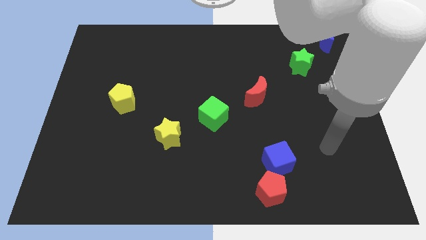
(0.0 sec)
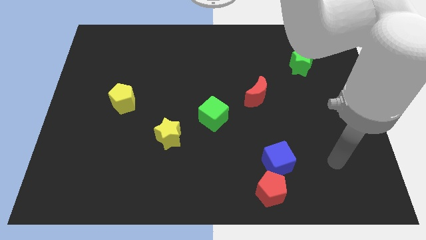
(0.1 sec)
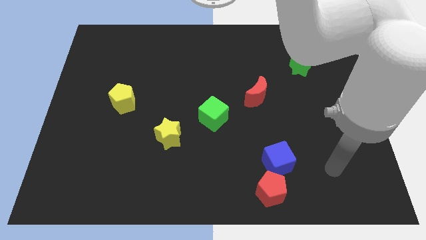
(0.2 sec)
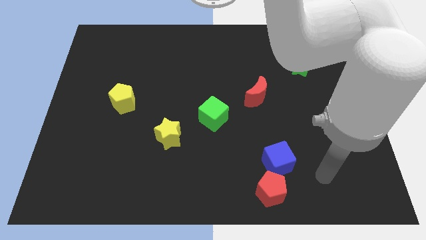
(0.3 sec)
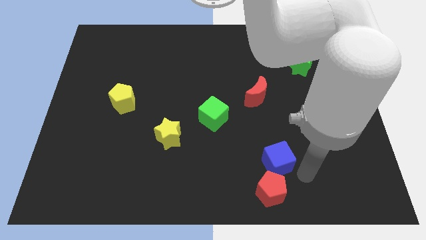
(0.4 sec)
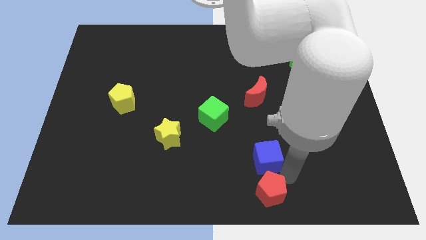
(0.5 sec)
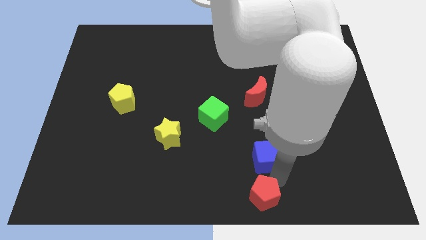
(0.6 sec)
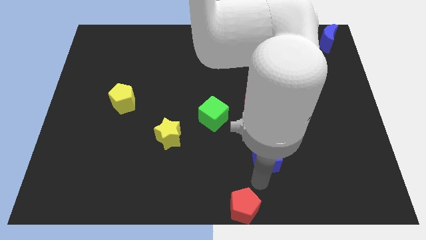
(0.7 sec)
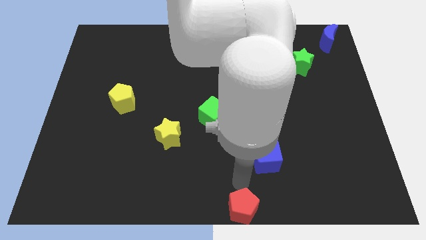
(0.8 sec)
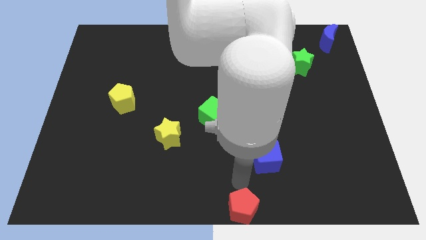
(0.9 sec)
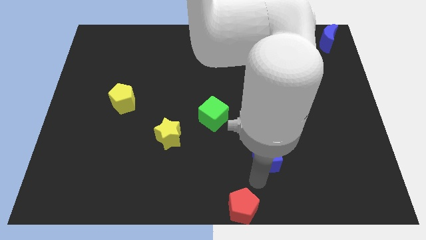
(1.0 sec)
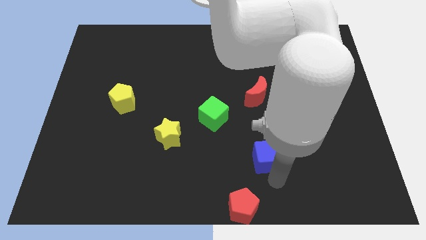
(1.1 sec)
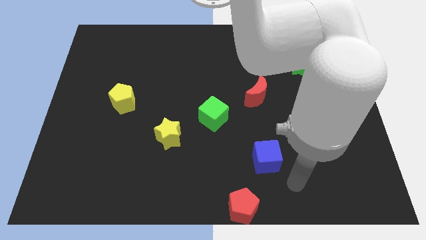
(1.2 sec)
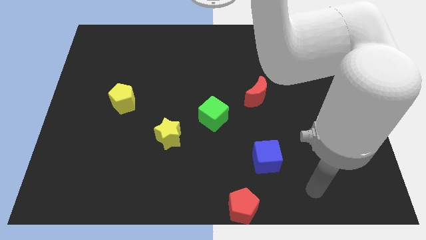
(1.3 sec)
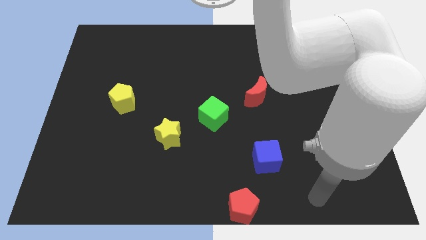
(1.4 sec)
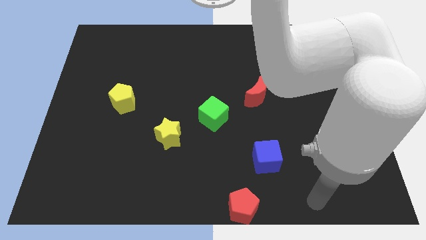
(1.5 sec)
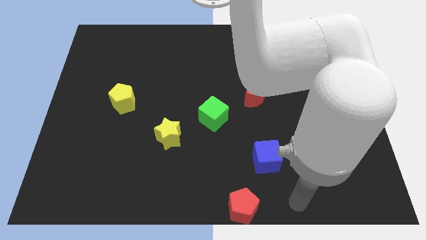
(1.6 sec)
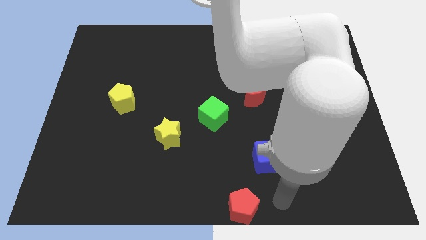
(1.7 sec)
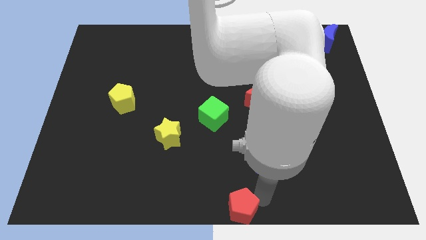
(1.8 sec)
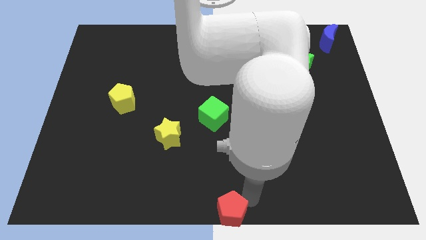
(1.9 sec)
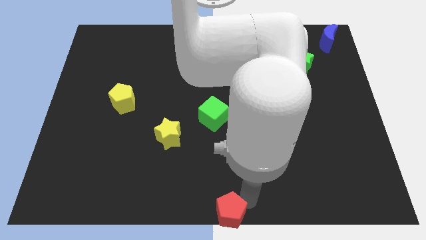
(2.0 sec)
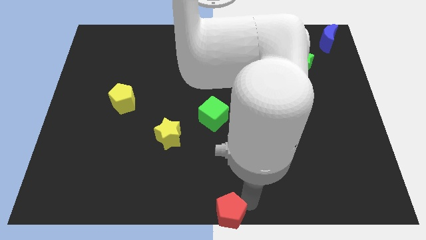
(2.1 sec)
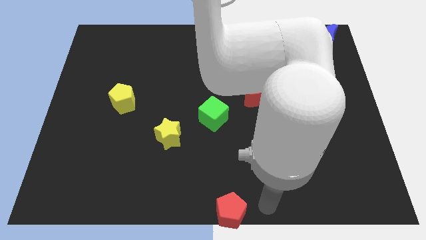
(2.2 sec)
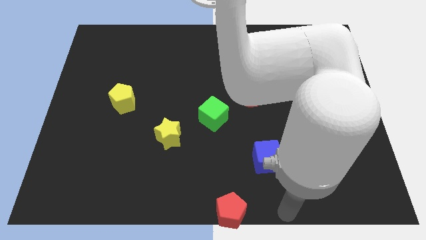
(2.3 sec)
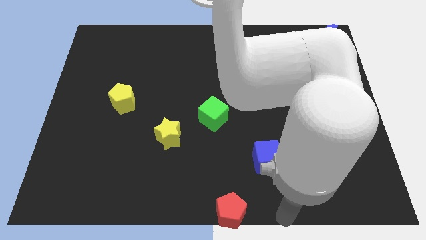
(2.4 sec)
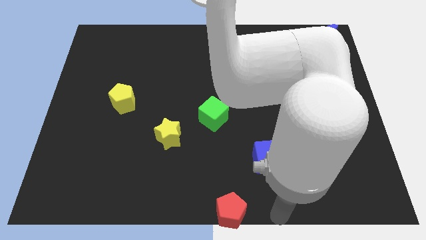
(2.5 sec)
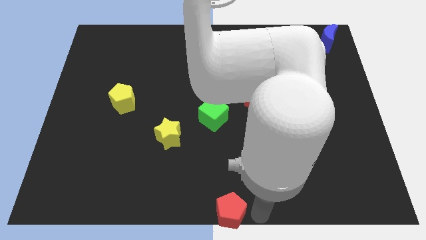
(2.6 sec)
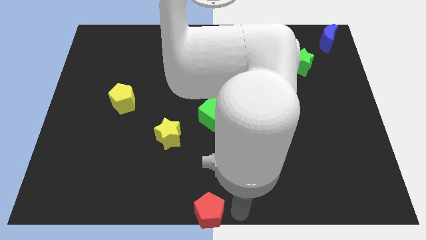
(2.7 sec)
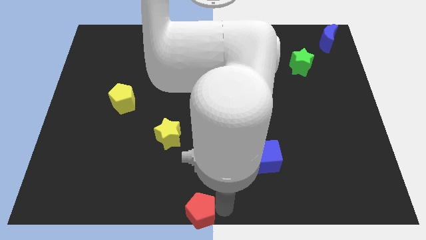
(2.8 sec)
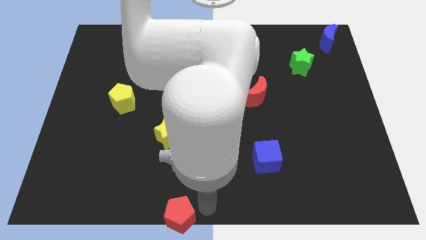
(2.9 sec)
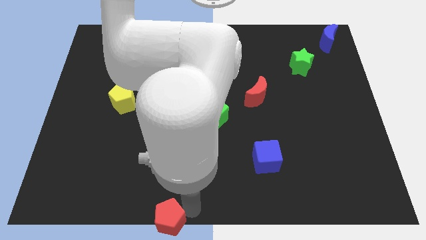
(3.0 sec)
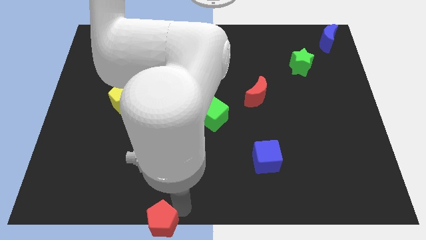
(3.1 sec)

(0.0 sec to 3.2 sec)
move red pentagon away from the blue cube

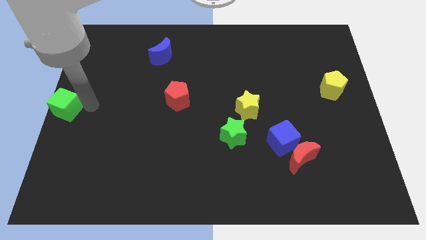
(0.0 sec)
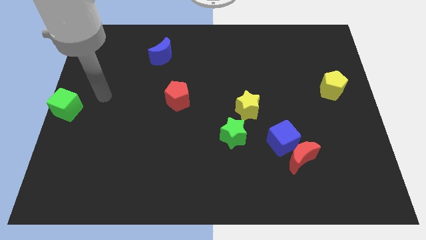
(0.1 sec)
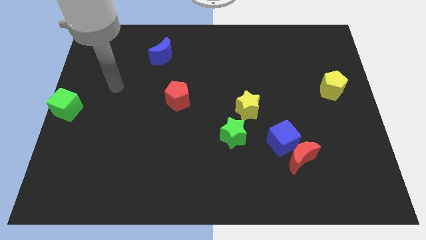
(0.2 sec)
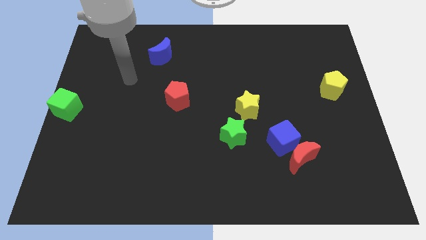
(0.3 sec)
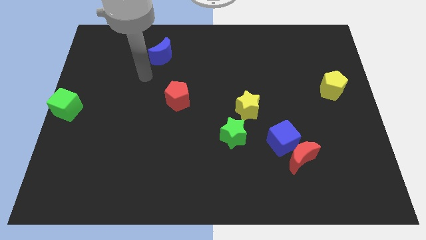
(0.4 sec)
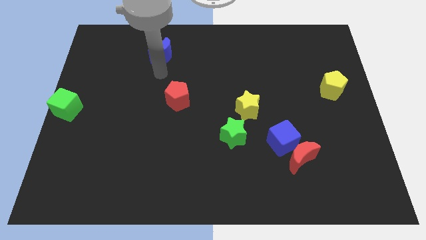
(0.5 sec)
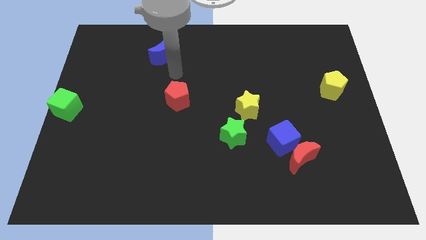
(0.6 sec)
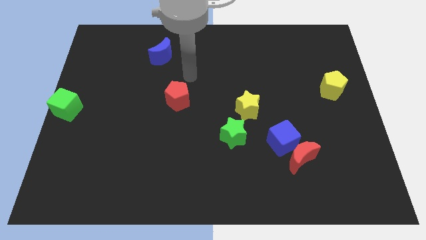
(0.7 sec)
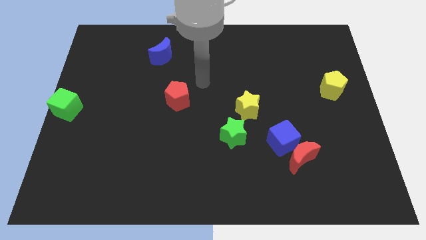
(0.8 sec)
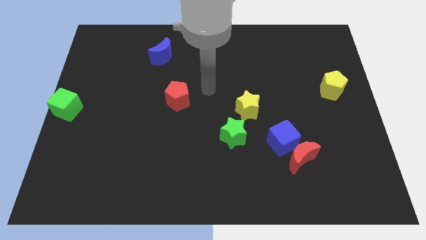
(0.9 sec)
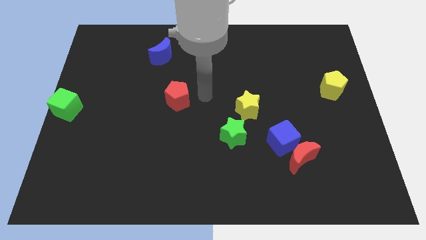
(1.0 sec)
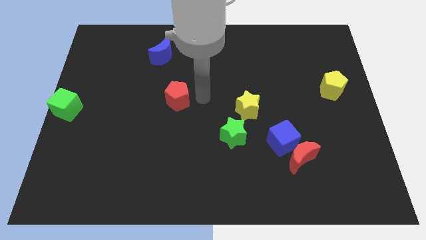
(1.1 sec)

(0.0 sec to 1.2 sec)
place the arm right to the red pentagon

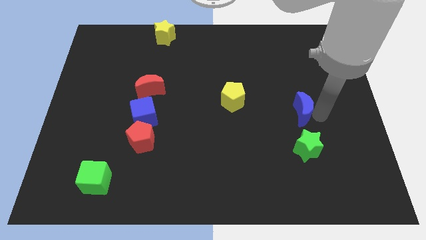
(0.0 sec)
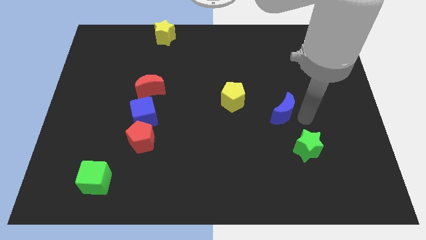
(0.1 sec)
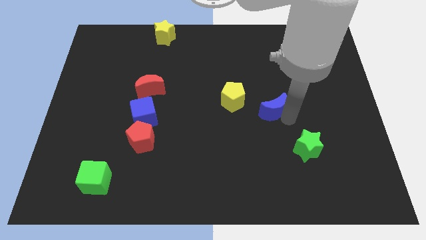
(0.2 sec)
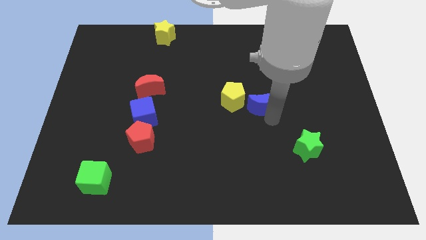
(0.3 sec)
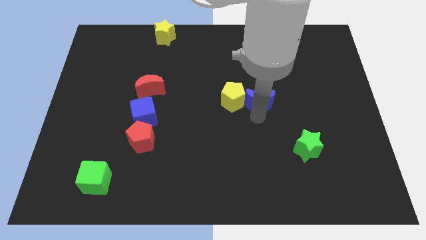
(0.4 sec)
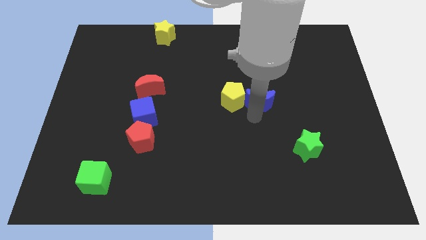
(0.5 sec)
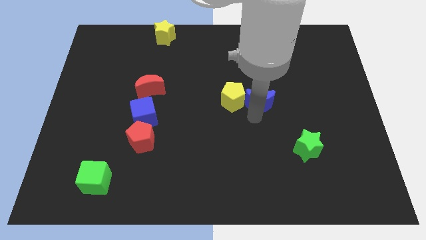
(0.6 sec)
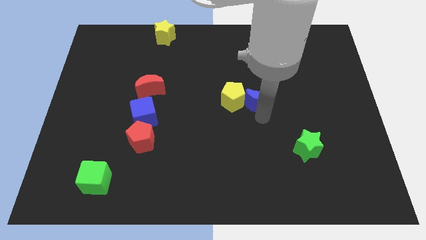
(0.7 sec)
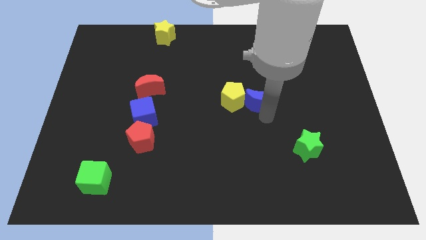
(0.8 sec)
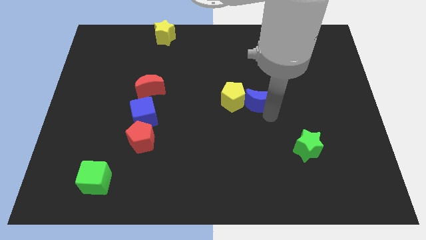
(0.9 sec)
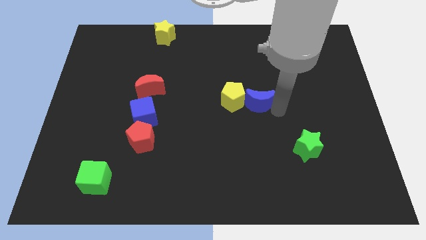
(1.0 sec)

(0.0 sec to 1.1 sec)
place blue moon to right of yellow pentagon

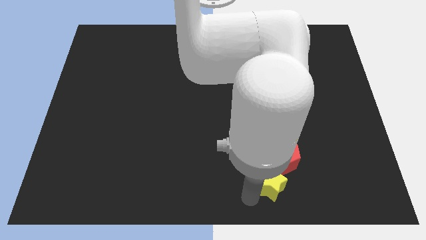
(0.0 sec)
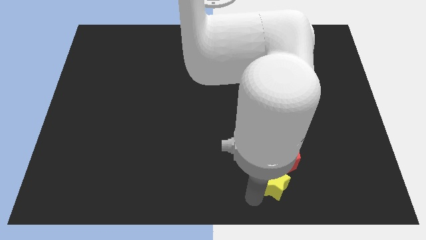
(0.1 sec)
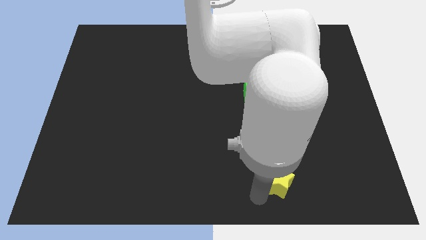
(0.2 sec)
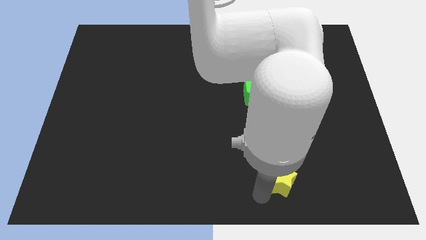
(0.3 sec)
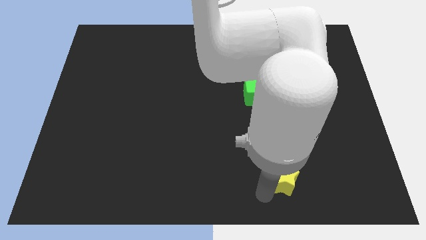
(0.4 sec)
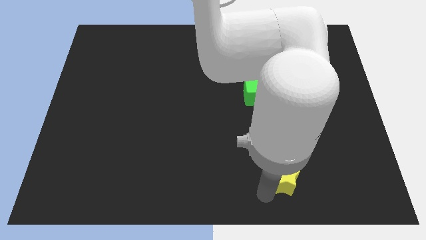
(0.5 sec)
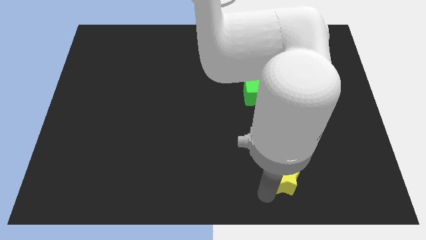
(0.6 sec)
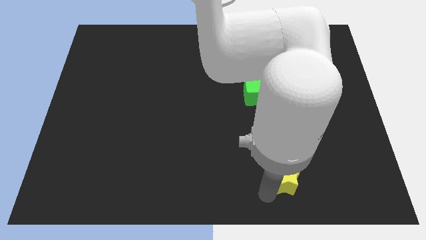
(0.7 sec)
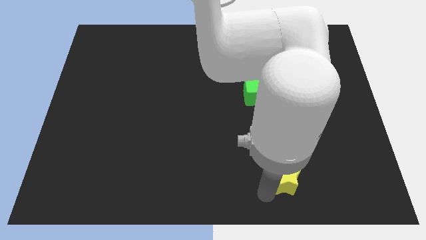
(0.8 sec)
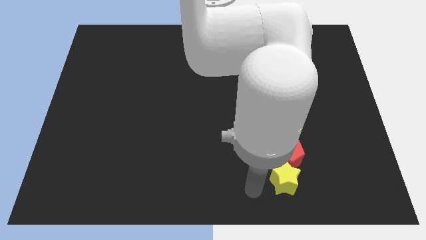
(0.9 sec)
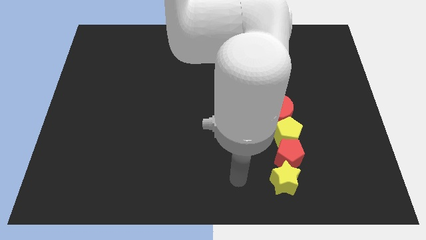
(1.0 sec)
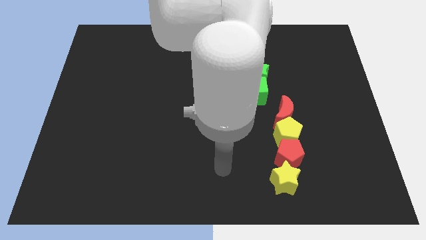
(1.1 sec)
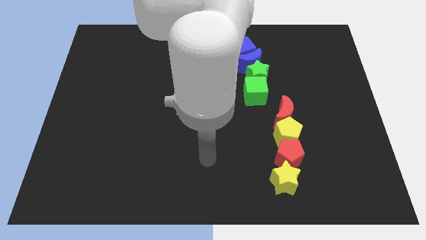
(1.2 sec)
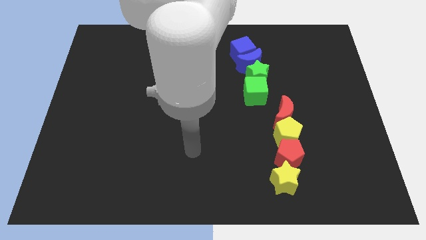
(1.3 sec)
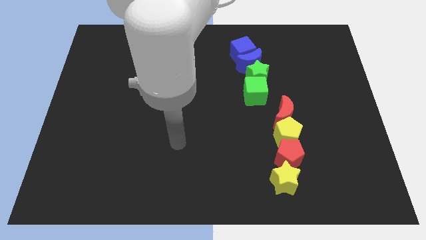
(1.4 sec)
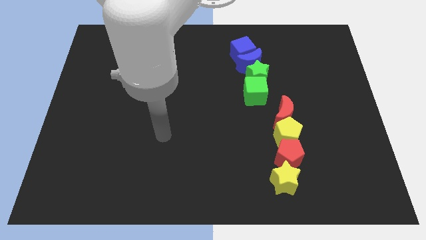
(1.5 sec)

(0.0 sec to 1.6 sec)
move the arm away from the yellow star

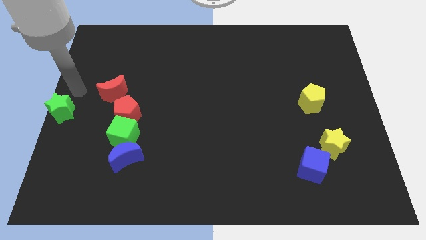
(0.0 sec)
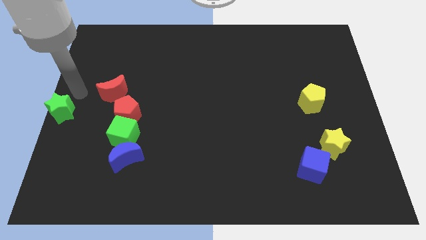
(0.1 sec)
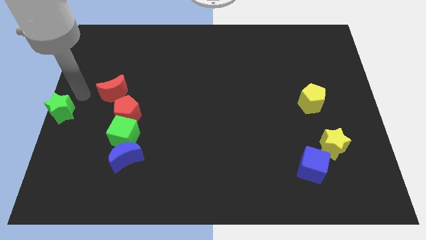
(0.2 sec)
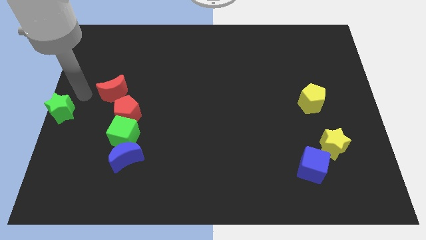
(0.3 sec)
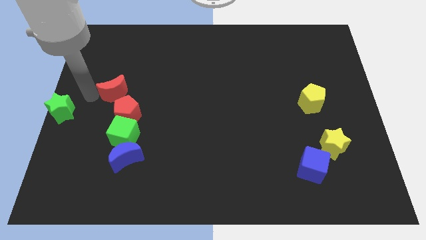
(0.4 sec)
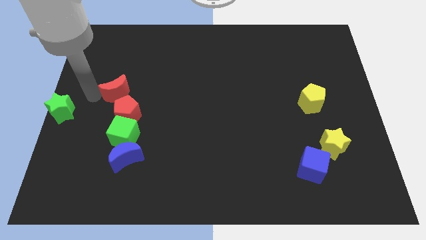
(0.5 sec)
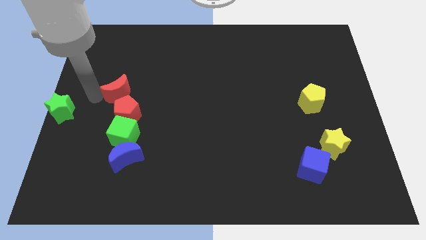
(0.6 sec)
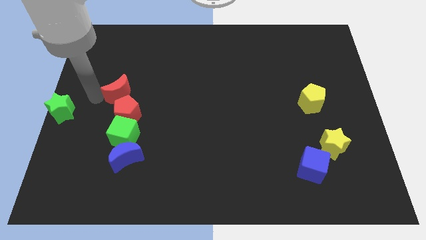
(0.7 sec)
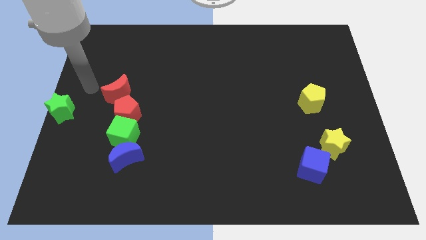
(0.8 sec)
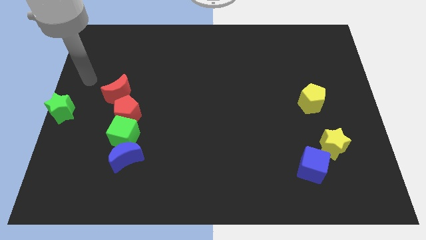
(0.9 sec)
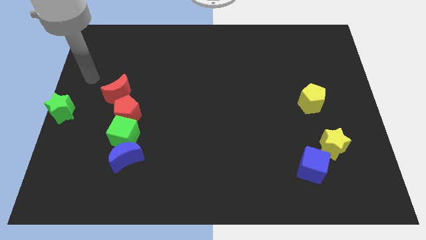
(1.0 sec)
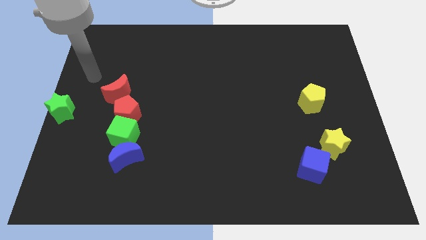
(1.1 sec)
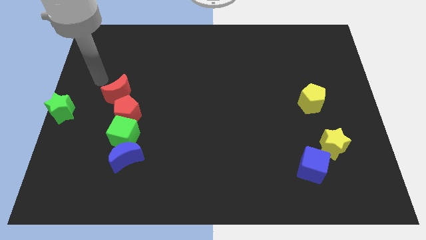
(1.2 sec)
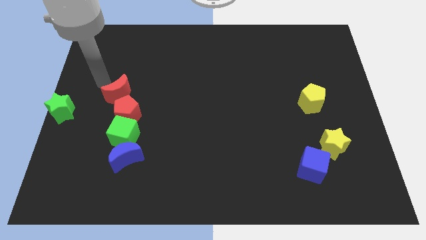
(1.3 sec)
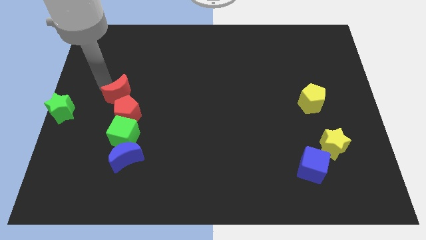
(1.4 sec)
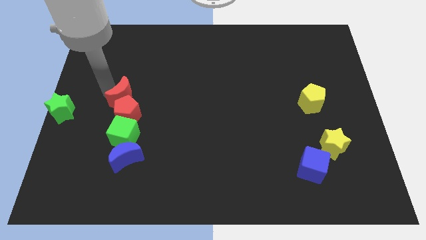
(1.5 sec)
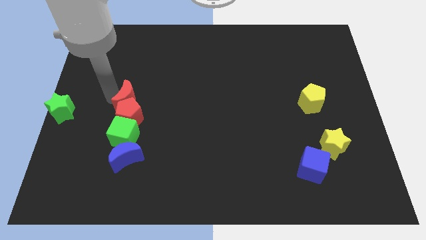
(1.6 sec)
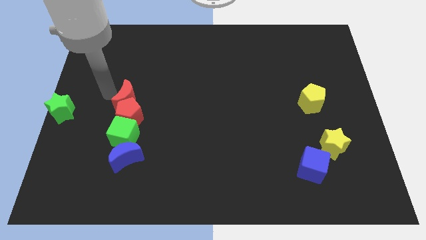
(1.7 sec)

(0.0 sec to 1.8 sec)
push the red crescent into the red pentagon

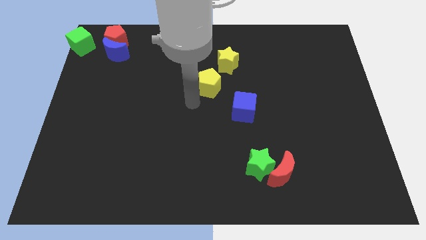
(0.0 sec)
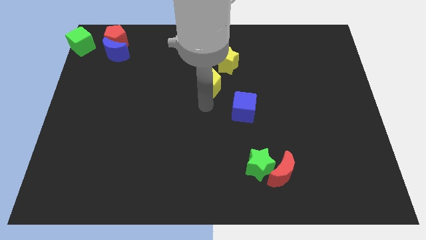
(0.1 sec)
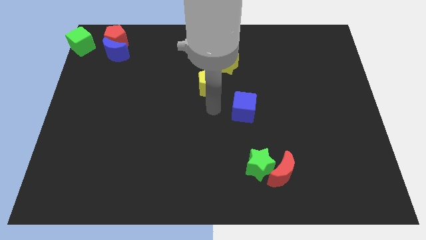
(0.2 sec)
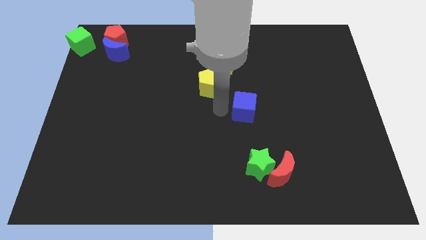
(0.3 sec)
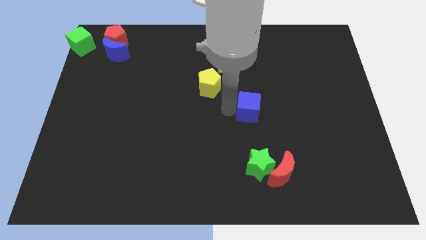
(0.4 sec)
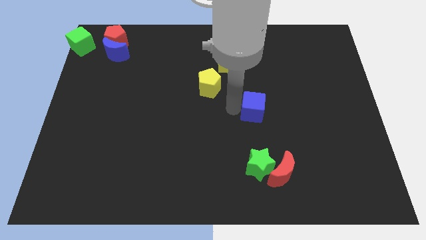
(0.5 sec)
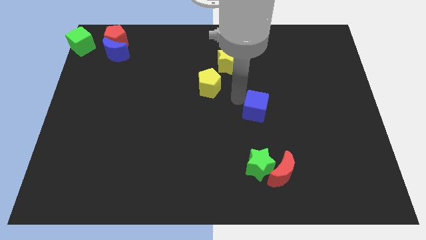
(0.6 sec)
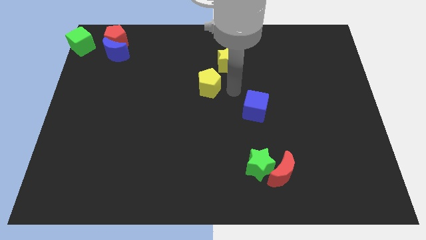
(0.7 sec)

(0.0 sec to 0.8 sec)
push the blue cube slightly towards the right side
